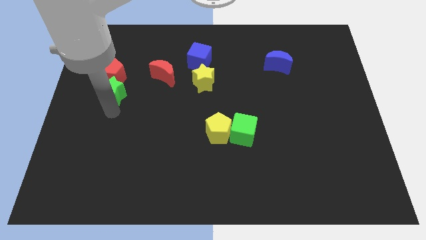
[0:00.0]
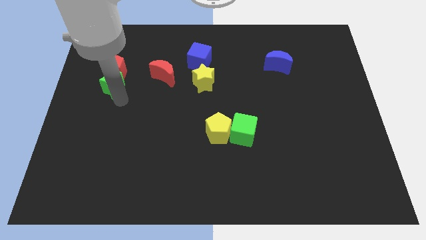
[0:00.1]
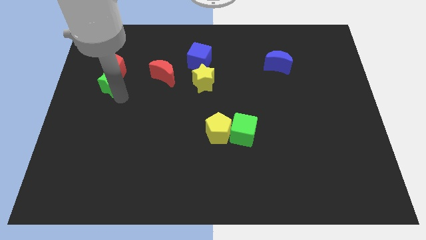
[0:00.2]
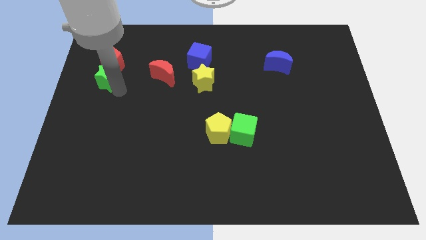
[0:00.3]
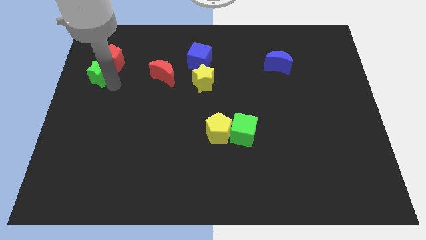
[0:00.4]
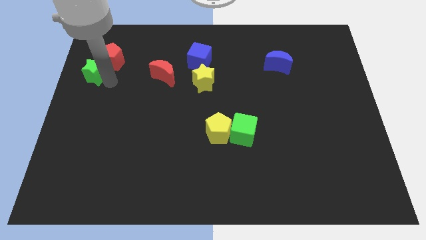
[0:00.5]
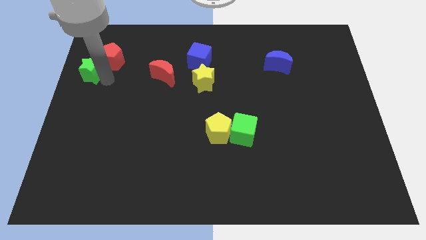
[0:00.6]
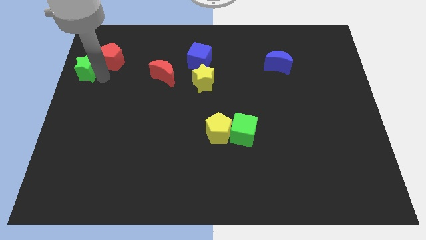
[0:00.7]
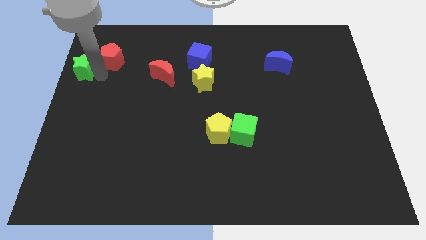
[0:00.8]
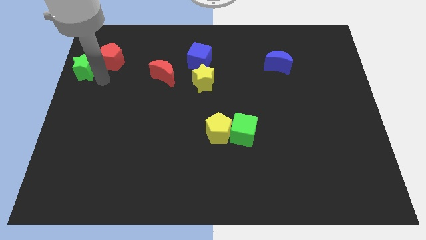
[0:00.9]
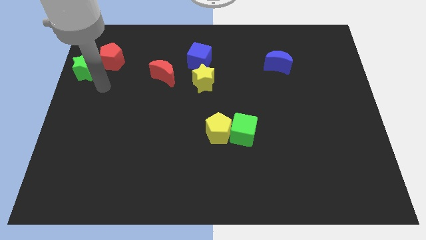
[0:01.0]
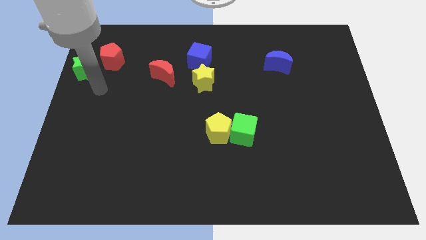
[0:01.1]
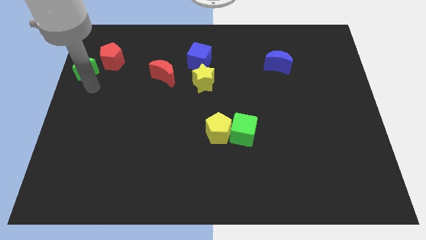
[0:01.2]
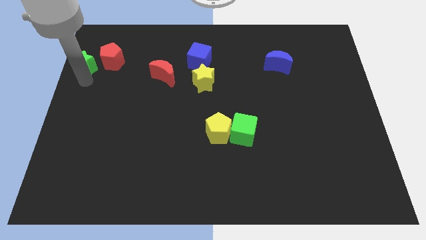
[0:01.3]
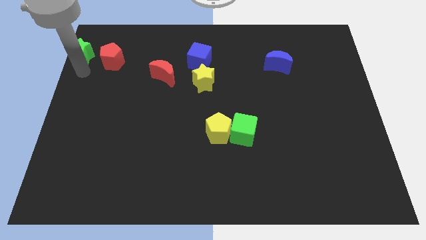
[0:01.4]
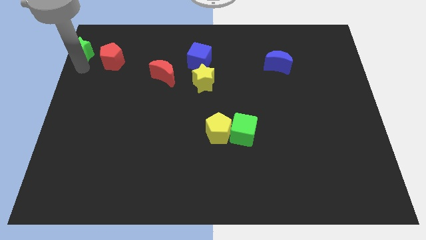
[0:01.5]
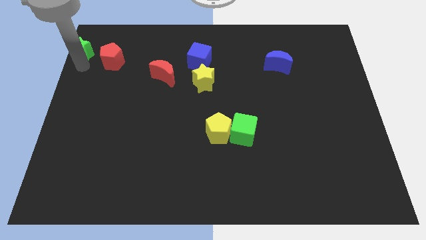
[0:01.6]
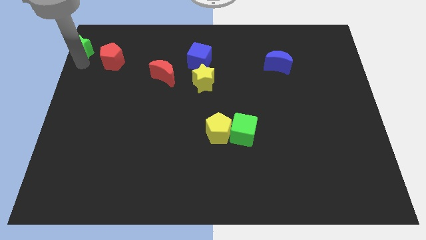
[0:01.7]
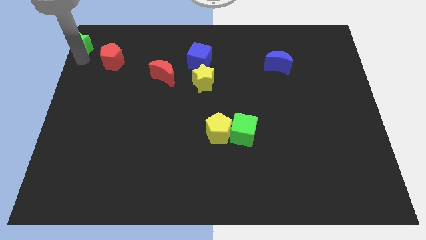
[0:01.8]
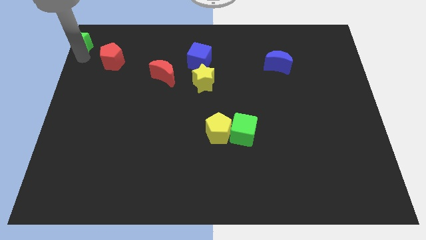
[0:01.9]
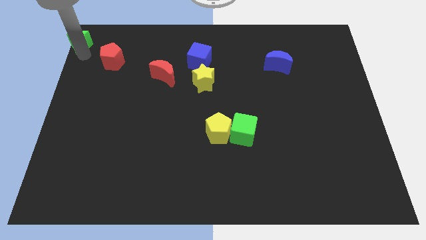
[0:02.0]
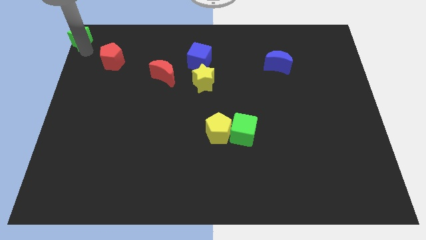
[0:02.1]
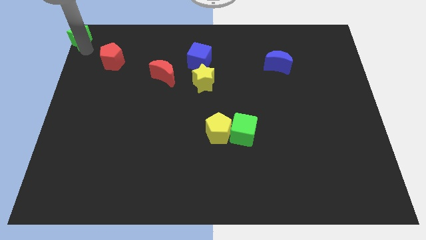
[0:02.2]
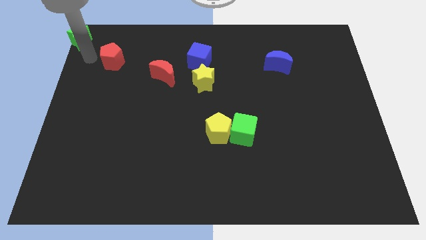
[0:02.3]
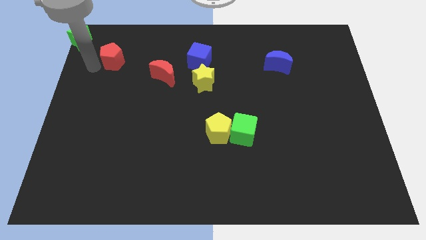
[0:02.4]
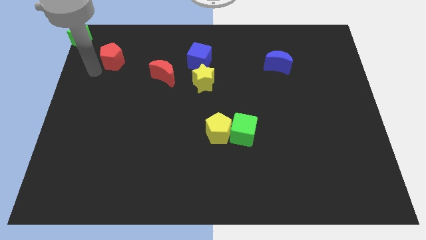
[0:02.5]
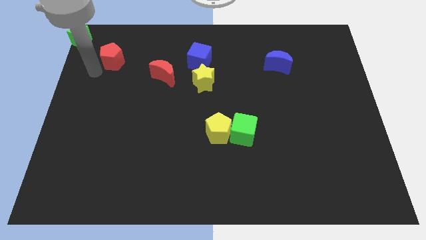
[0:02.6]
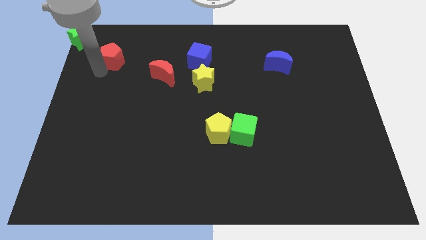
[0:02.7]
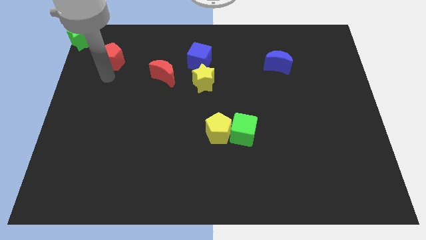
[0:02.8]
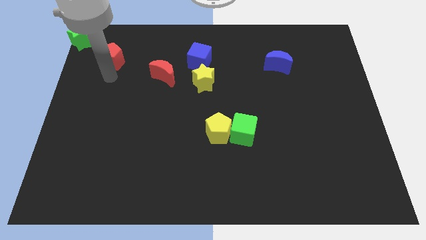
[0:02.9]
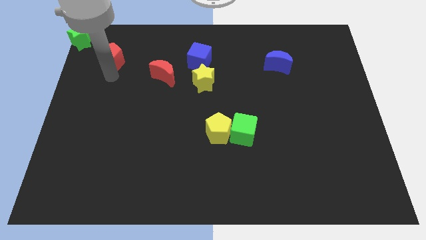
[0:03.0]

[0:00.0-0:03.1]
move the green star to the top left corner of the board

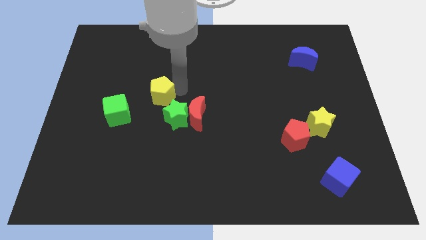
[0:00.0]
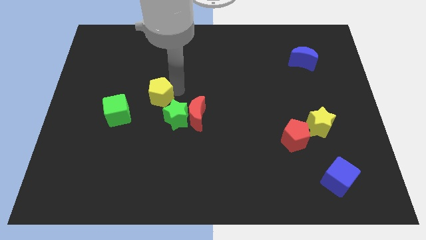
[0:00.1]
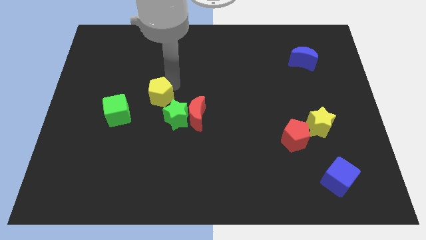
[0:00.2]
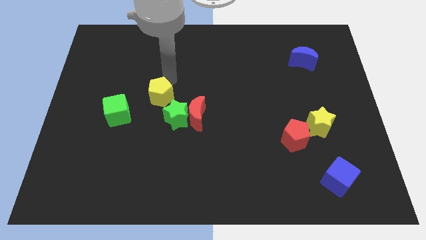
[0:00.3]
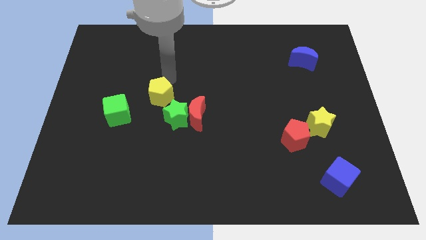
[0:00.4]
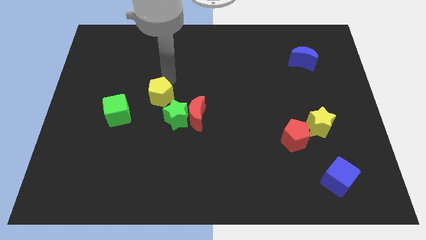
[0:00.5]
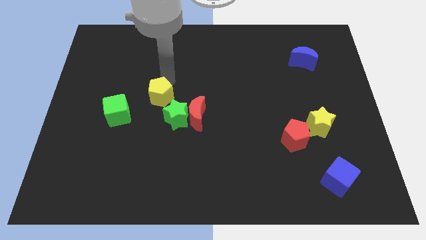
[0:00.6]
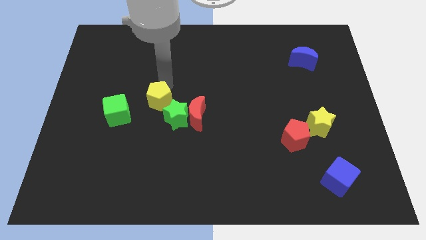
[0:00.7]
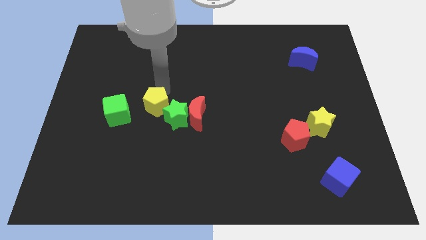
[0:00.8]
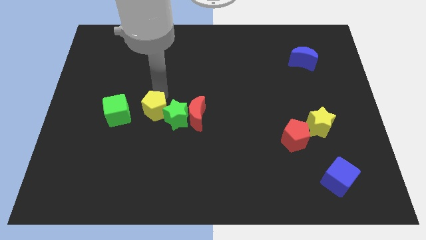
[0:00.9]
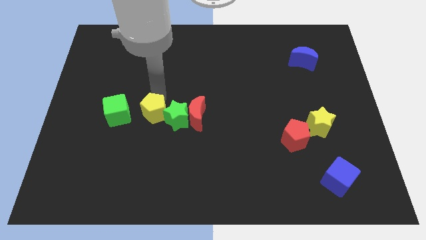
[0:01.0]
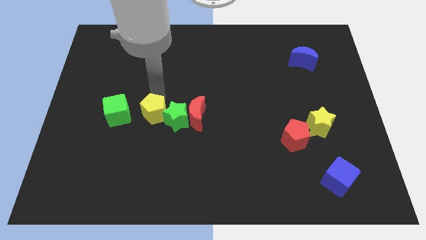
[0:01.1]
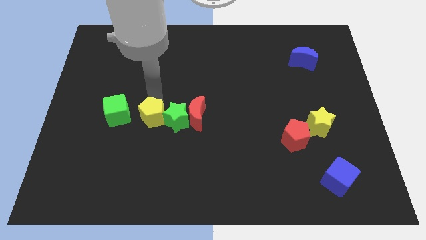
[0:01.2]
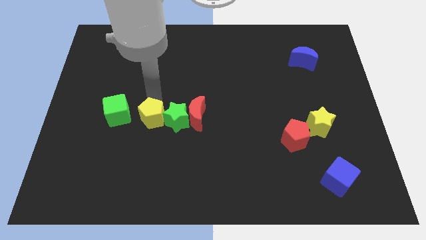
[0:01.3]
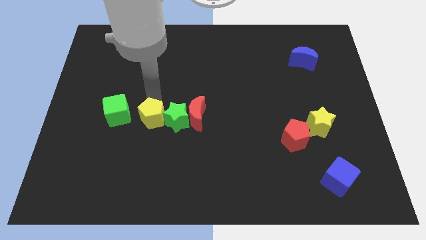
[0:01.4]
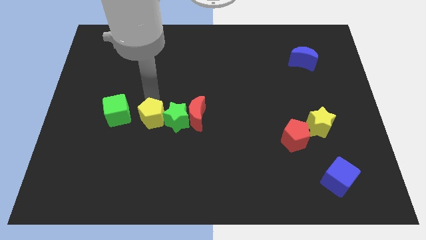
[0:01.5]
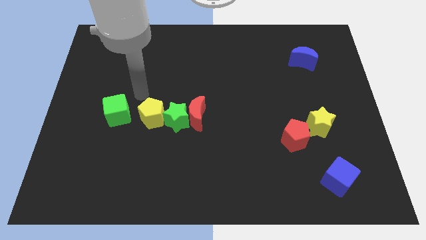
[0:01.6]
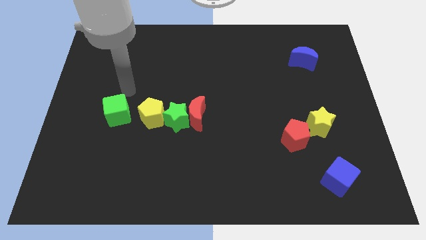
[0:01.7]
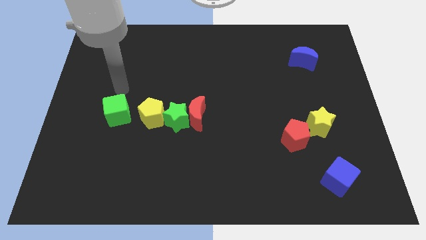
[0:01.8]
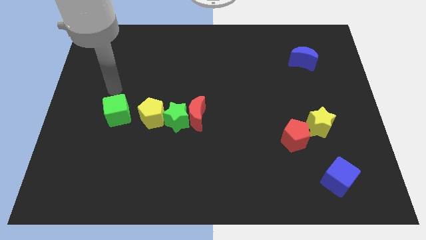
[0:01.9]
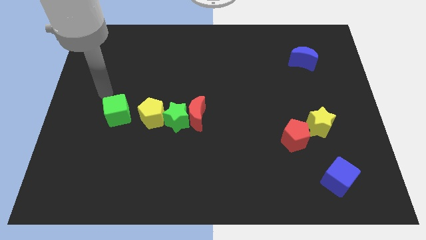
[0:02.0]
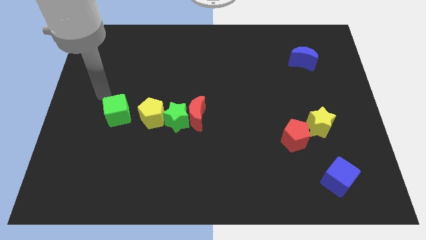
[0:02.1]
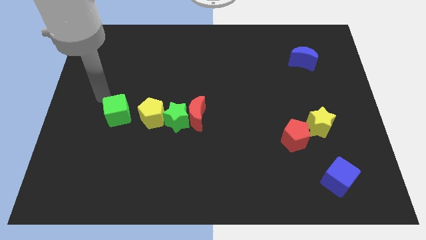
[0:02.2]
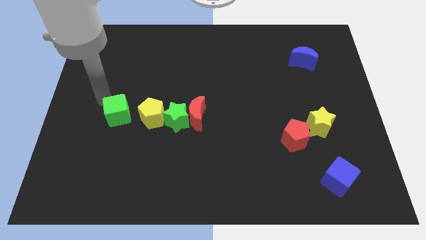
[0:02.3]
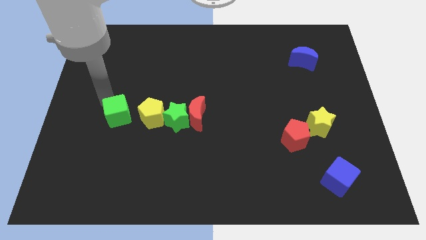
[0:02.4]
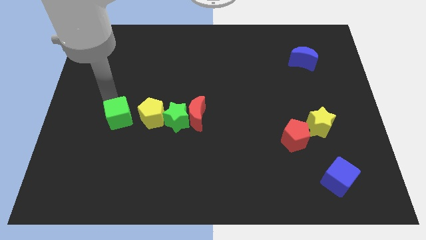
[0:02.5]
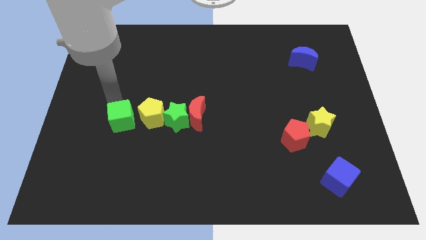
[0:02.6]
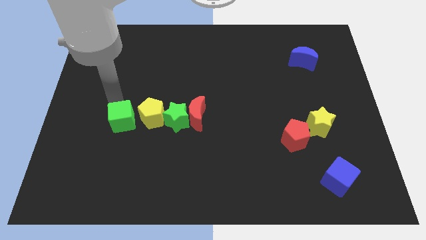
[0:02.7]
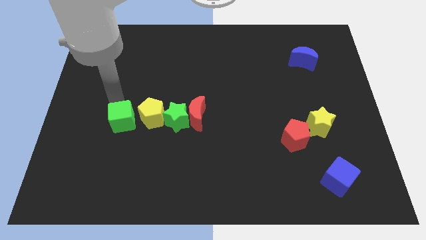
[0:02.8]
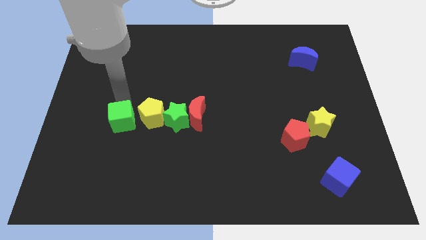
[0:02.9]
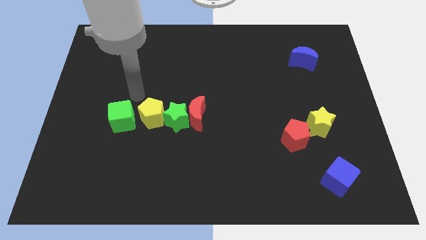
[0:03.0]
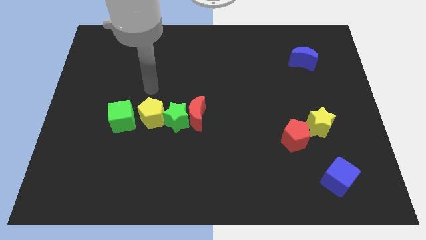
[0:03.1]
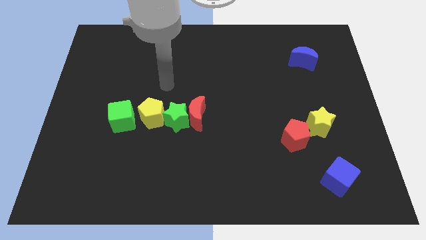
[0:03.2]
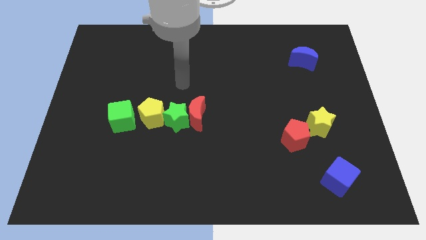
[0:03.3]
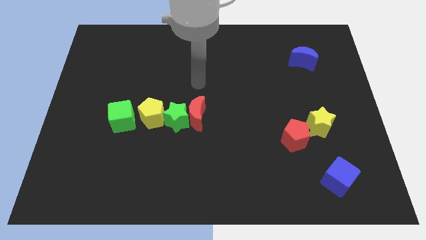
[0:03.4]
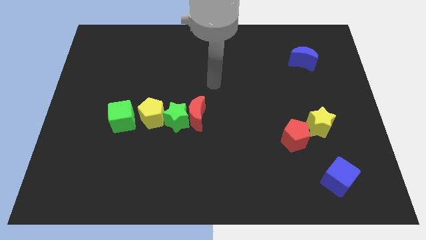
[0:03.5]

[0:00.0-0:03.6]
form a horizontal line with the green cube yellow pentagon and green star at the left of the board

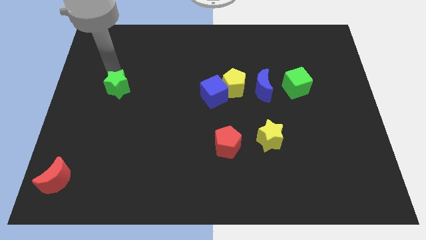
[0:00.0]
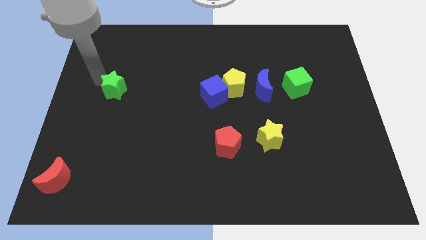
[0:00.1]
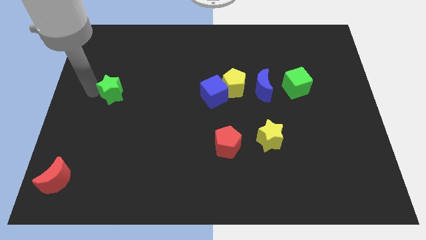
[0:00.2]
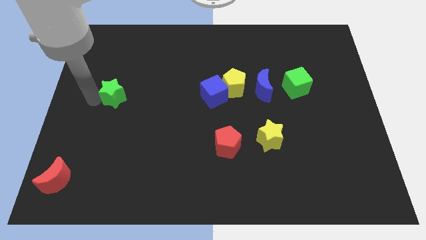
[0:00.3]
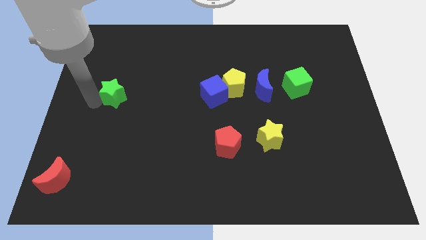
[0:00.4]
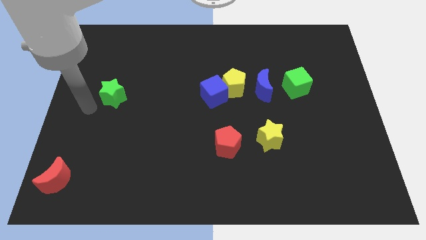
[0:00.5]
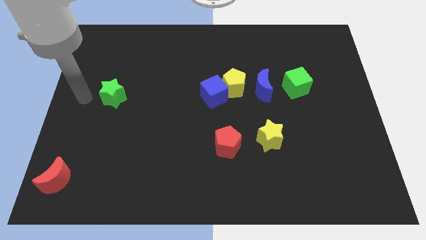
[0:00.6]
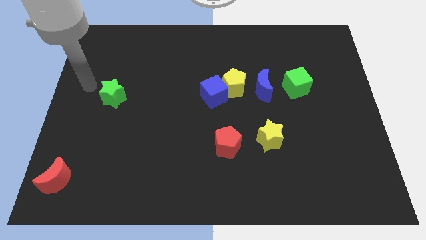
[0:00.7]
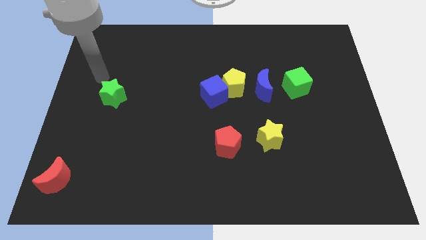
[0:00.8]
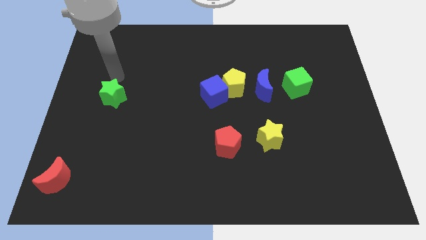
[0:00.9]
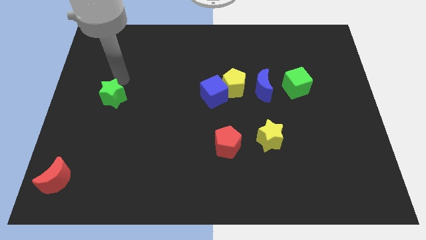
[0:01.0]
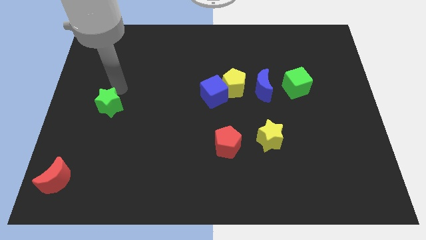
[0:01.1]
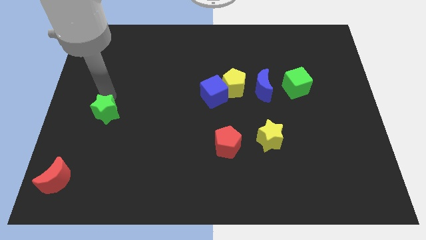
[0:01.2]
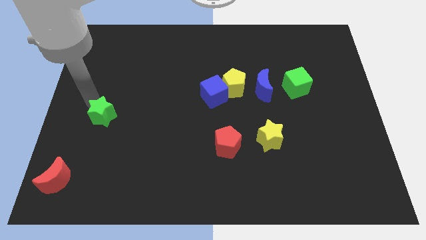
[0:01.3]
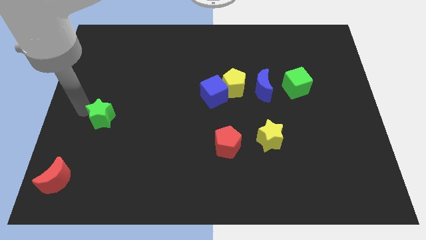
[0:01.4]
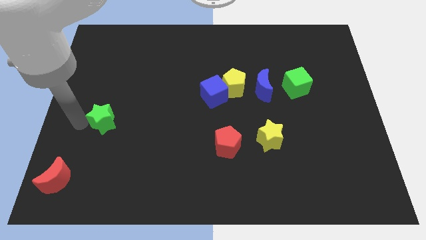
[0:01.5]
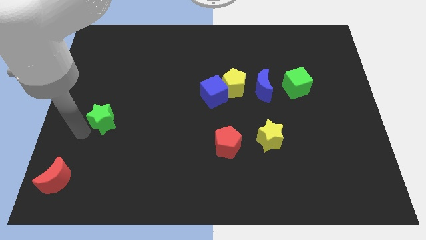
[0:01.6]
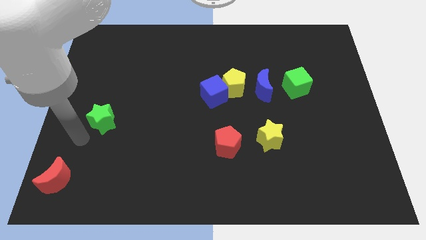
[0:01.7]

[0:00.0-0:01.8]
move green star diagonally top right to the red crescent

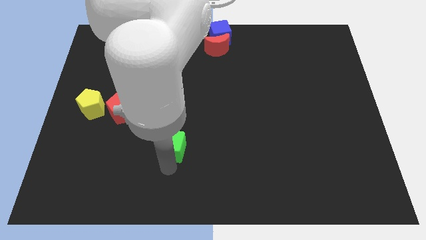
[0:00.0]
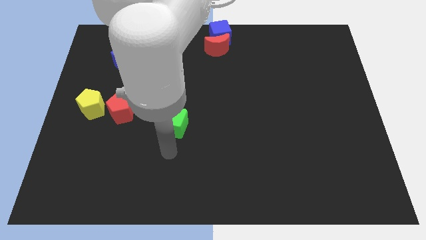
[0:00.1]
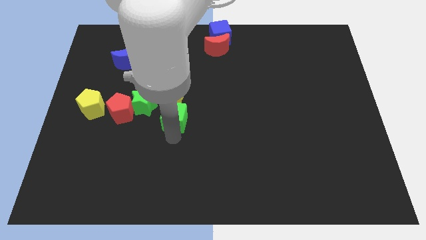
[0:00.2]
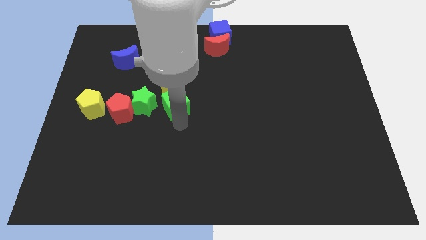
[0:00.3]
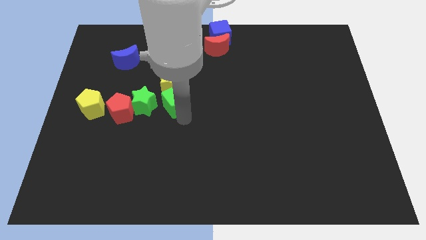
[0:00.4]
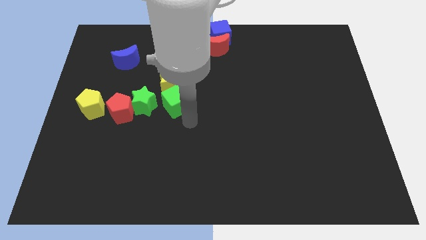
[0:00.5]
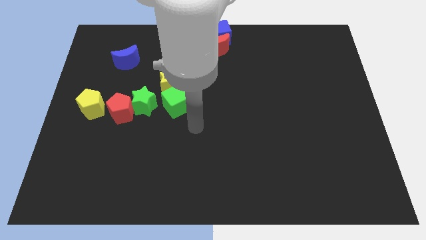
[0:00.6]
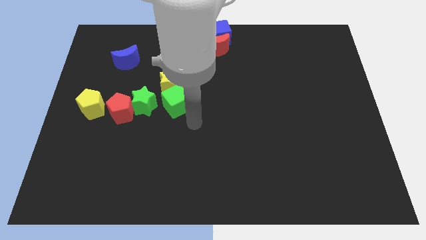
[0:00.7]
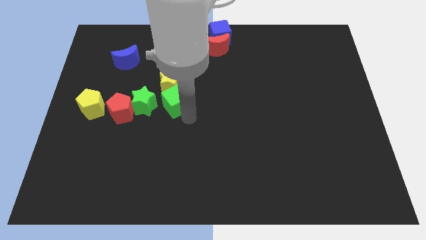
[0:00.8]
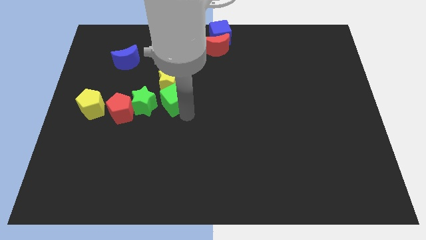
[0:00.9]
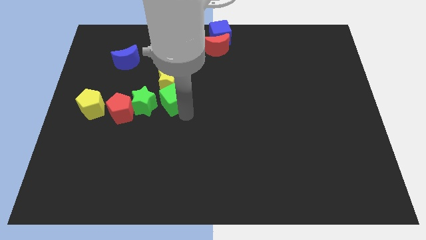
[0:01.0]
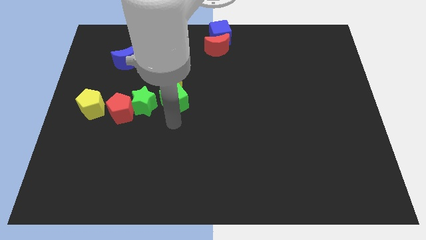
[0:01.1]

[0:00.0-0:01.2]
place green cube on right to green star
